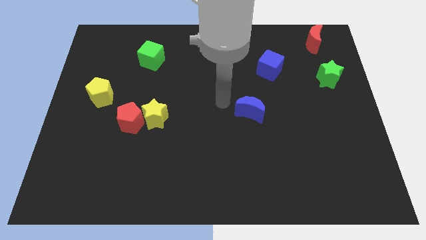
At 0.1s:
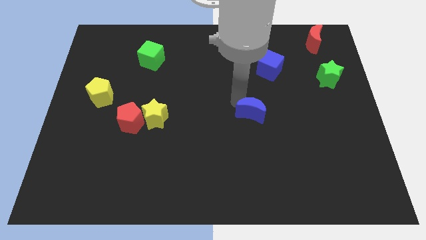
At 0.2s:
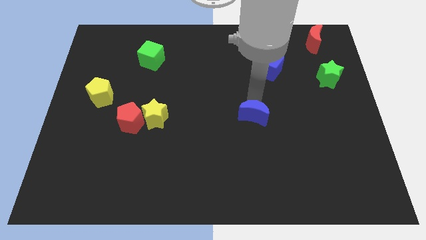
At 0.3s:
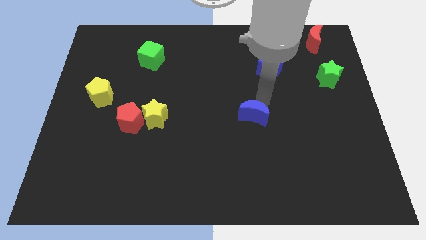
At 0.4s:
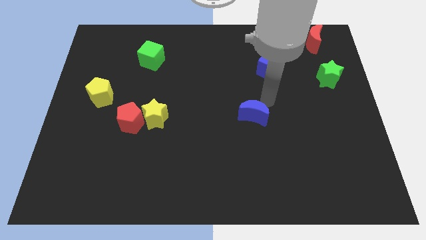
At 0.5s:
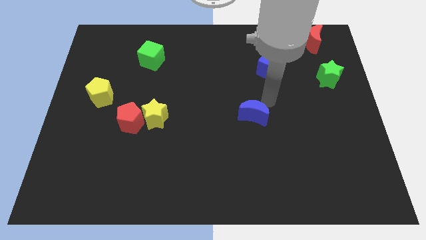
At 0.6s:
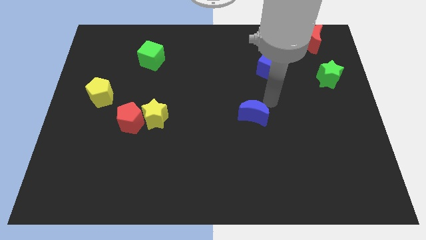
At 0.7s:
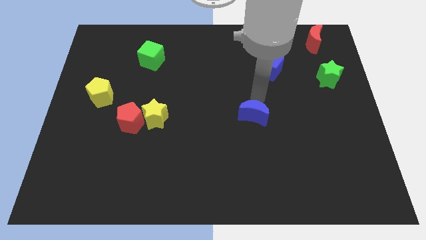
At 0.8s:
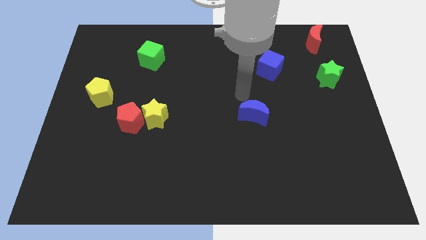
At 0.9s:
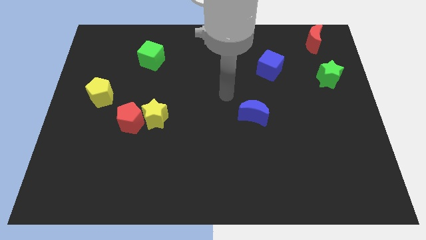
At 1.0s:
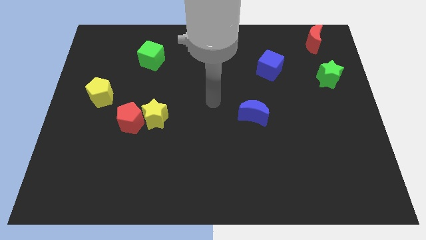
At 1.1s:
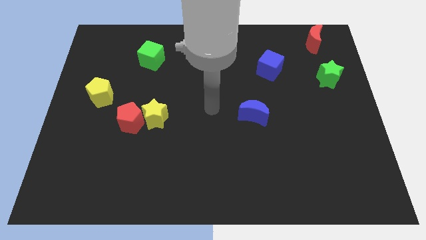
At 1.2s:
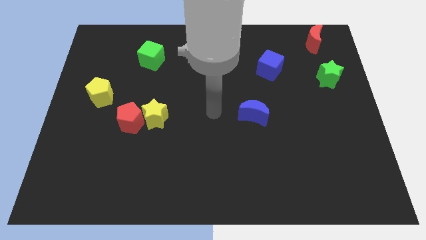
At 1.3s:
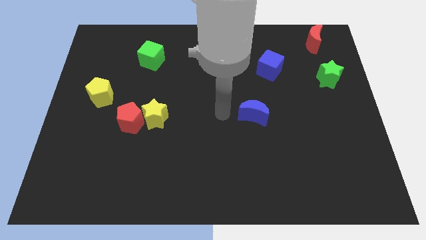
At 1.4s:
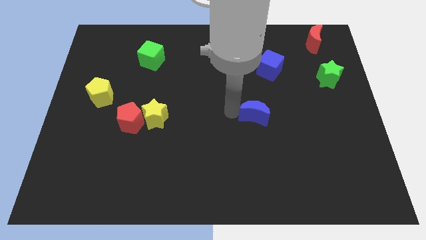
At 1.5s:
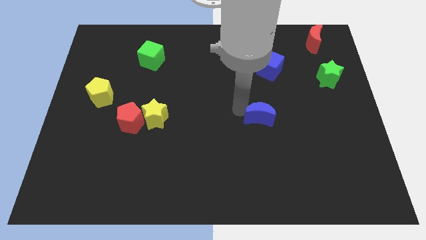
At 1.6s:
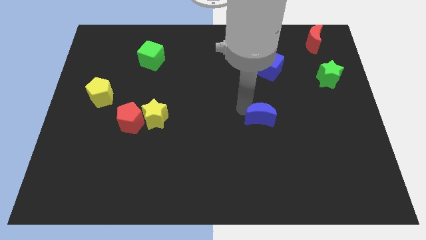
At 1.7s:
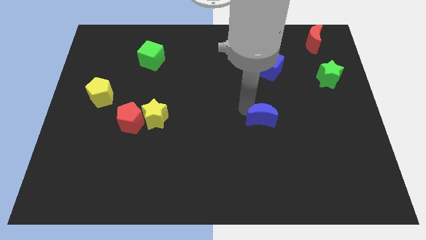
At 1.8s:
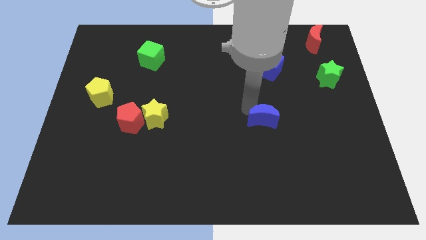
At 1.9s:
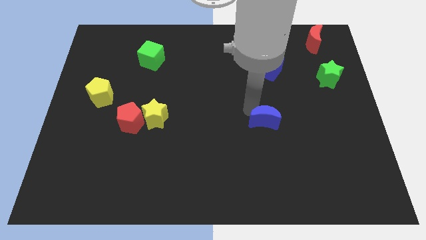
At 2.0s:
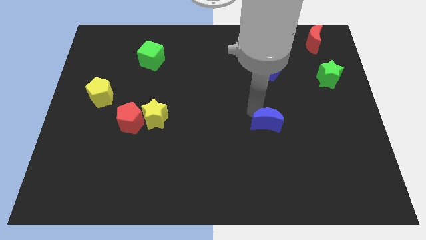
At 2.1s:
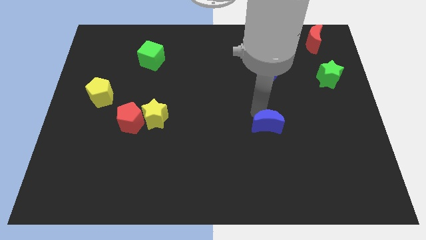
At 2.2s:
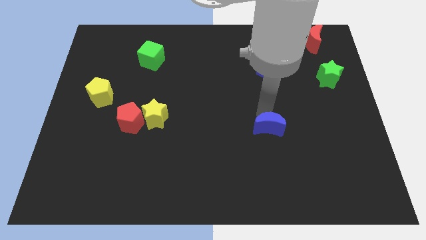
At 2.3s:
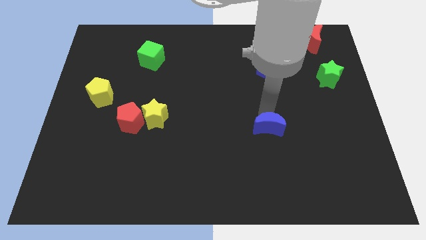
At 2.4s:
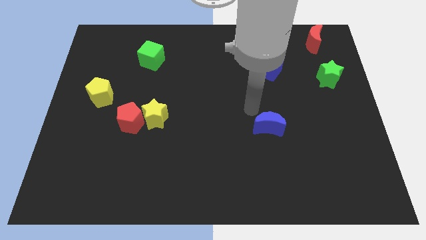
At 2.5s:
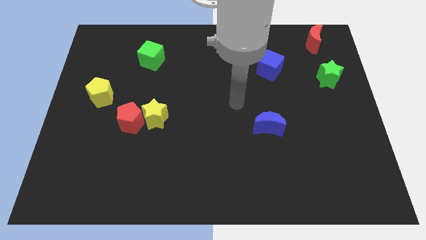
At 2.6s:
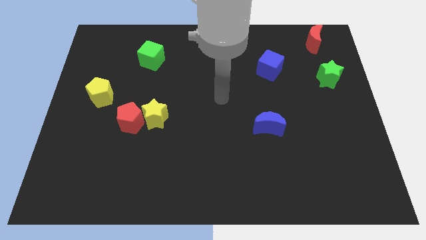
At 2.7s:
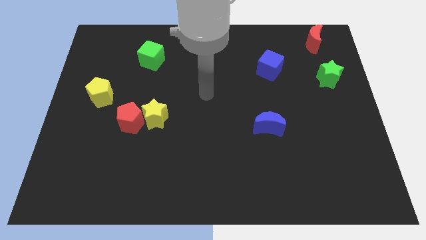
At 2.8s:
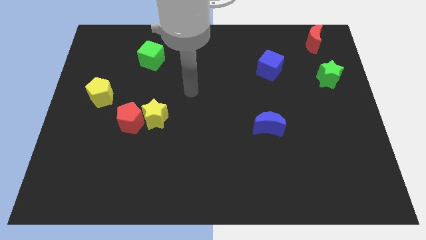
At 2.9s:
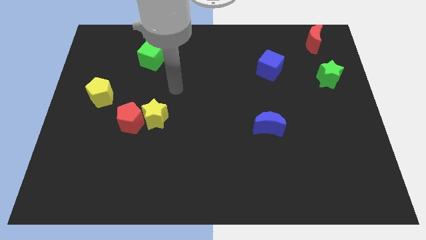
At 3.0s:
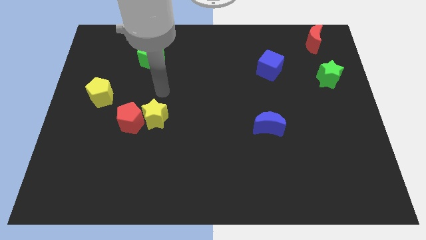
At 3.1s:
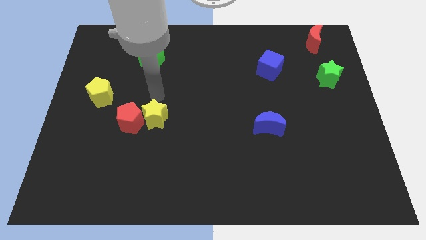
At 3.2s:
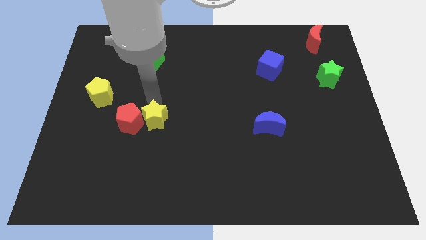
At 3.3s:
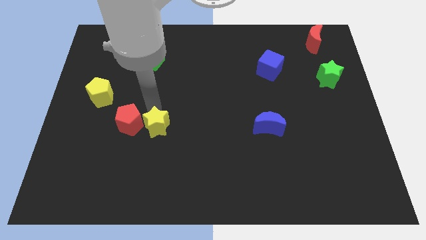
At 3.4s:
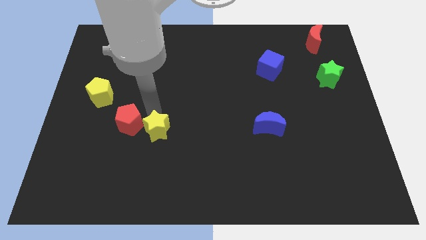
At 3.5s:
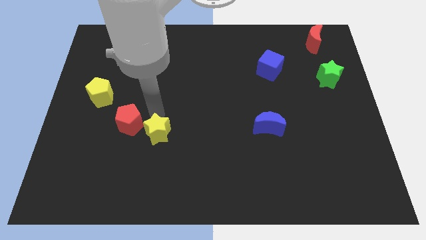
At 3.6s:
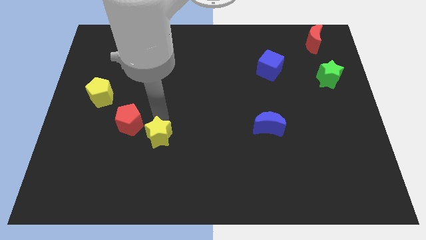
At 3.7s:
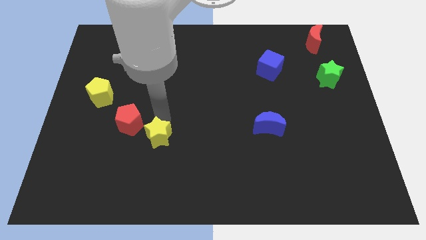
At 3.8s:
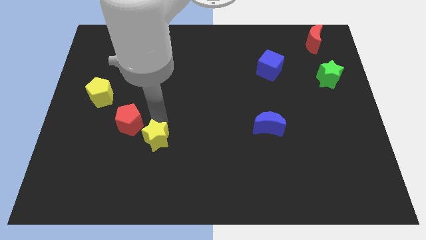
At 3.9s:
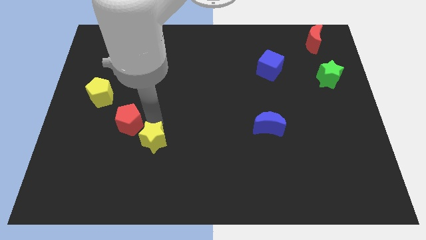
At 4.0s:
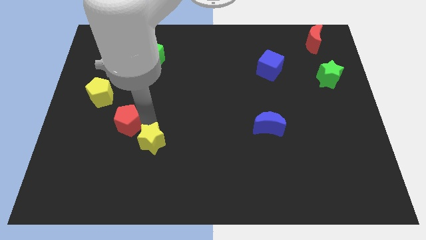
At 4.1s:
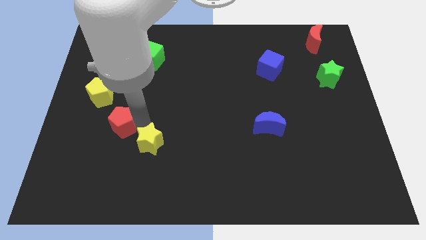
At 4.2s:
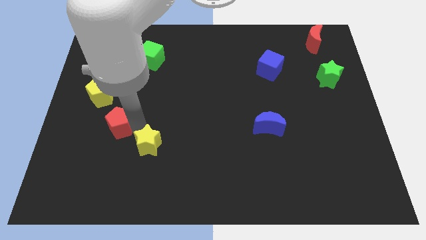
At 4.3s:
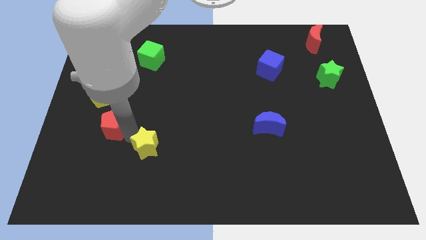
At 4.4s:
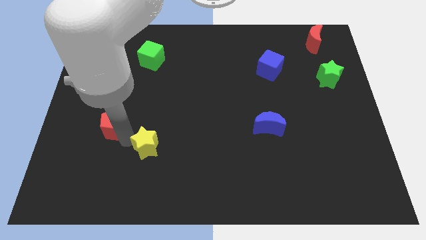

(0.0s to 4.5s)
move the yellow star to the center bottom

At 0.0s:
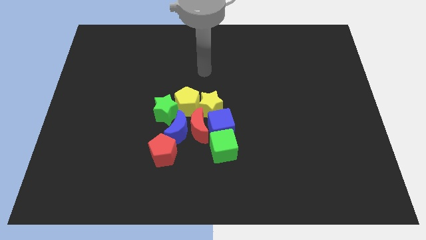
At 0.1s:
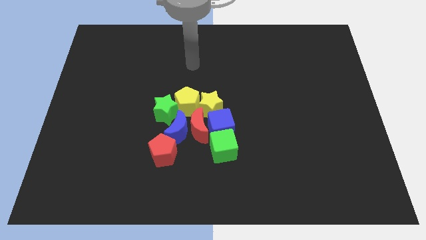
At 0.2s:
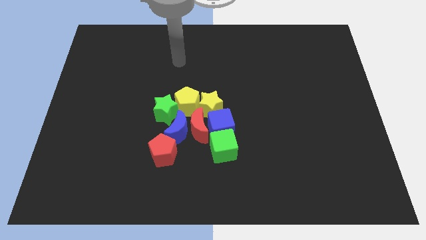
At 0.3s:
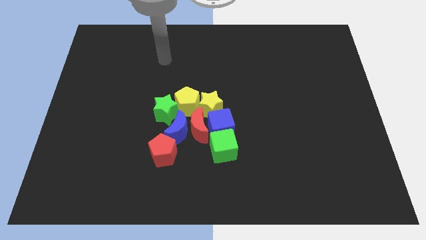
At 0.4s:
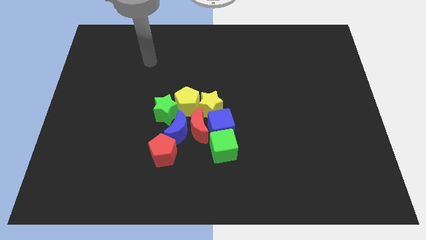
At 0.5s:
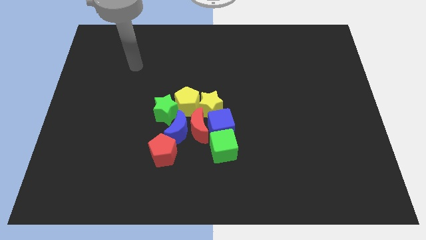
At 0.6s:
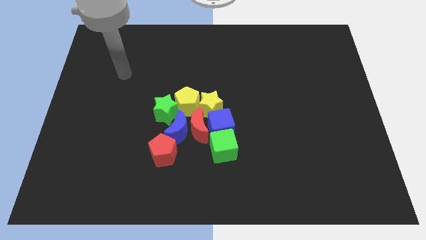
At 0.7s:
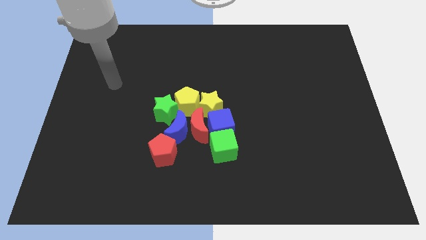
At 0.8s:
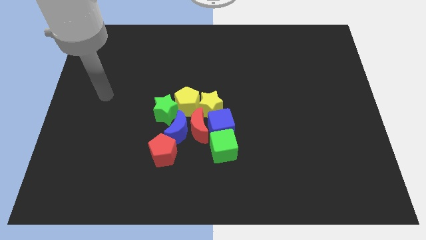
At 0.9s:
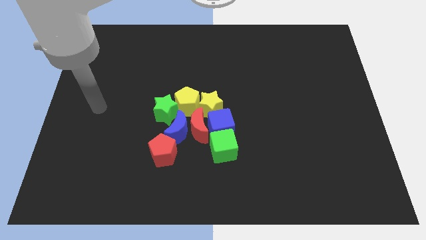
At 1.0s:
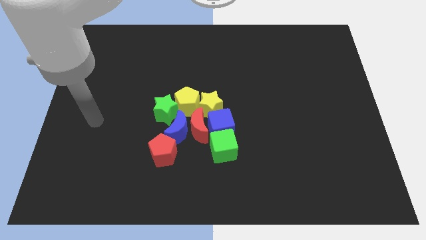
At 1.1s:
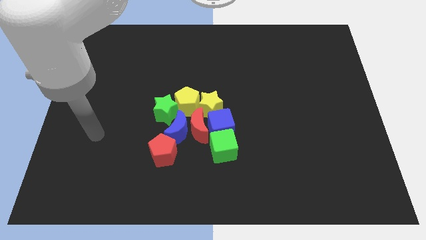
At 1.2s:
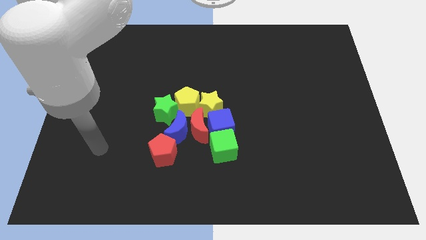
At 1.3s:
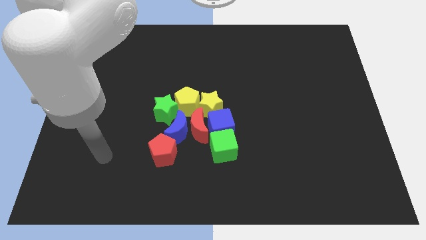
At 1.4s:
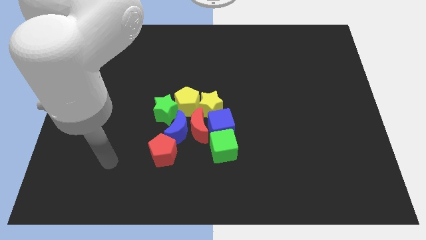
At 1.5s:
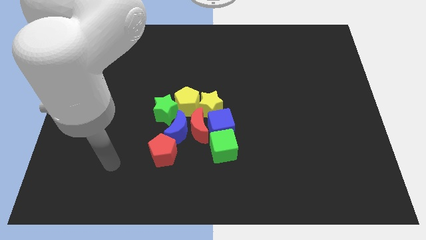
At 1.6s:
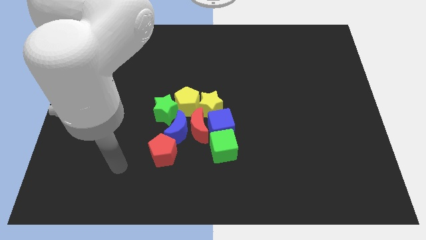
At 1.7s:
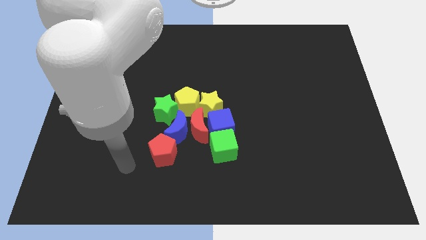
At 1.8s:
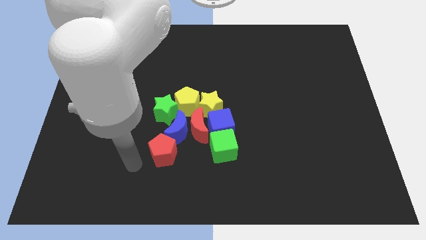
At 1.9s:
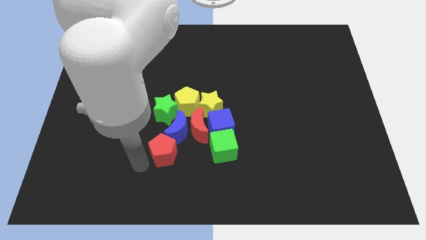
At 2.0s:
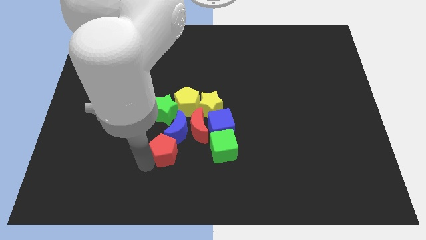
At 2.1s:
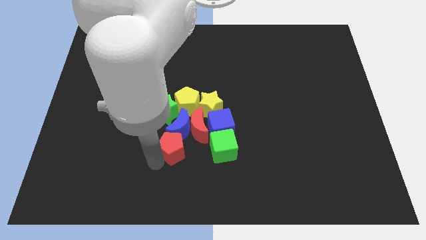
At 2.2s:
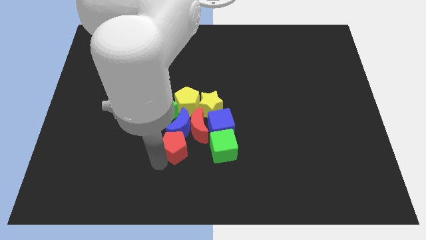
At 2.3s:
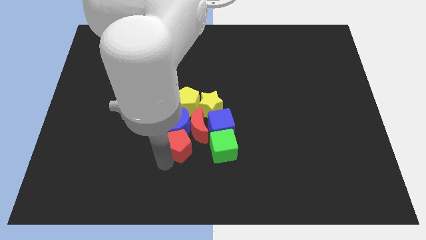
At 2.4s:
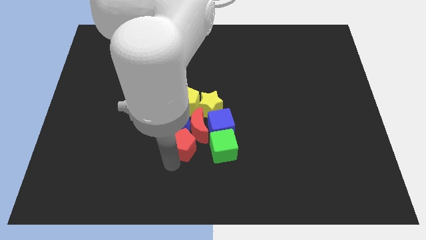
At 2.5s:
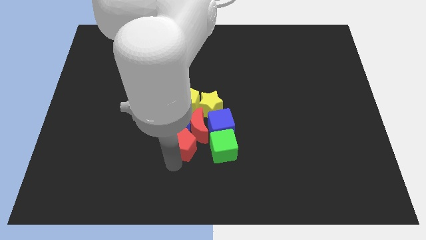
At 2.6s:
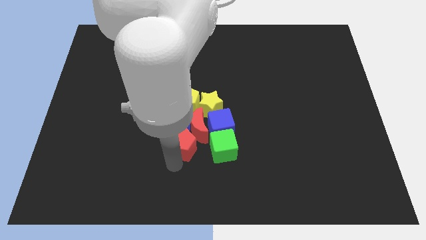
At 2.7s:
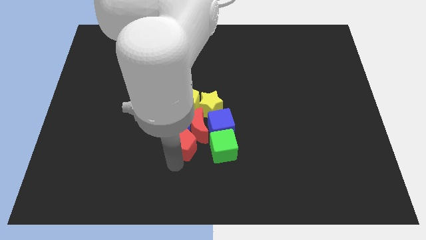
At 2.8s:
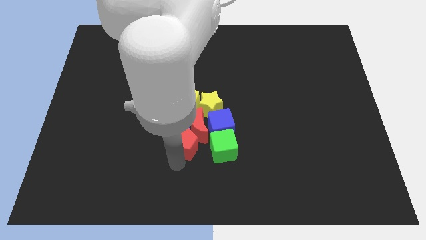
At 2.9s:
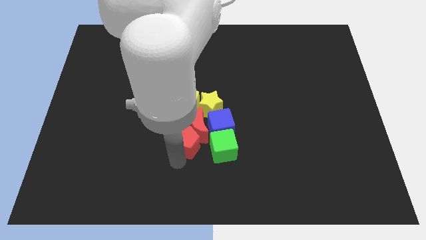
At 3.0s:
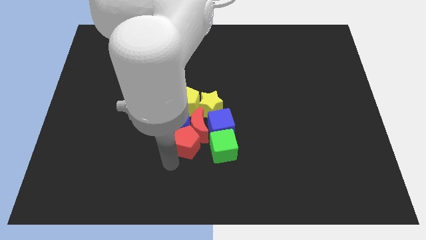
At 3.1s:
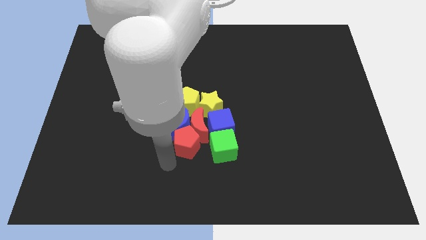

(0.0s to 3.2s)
add the red pentagon to the group of blocks

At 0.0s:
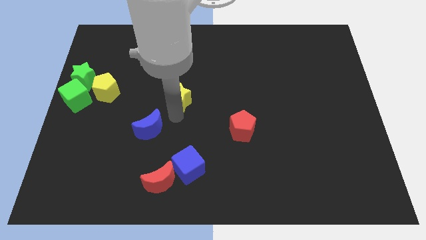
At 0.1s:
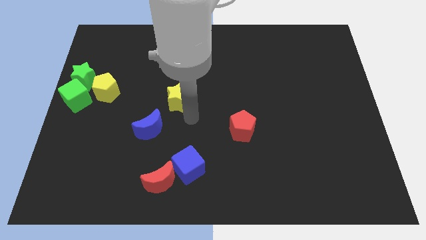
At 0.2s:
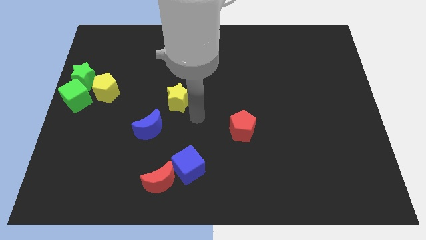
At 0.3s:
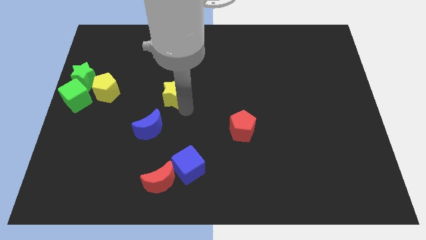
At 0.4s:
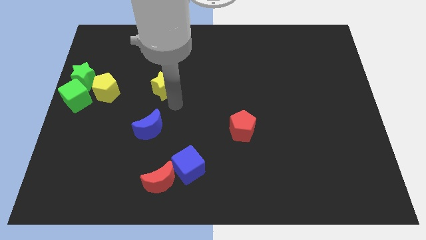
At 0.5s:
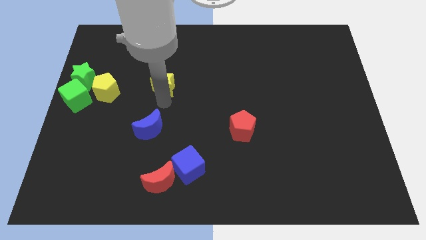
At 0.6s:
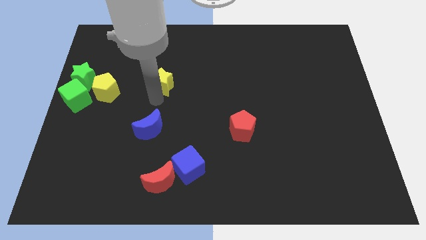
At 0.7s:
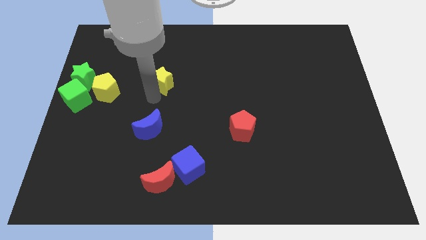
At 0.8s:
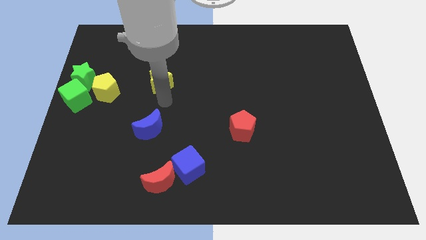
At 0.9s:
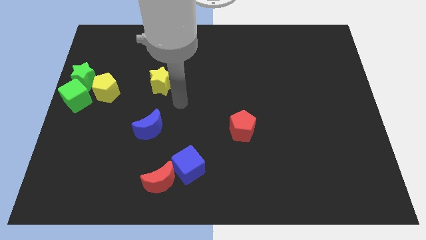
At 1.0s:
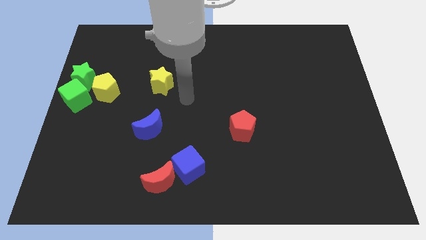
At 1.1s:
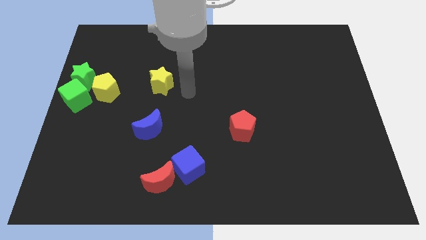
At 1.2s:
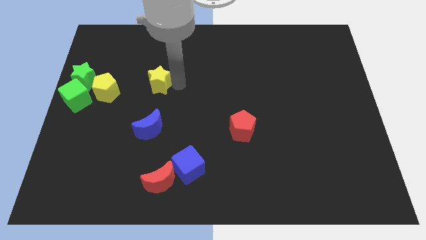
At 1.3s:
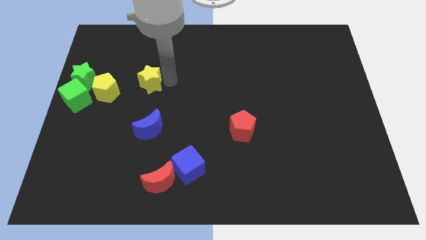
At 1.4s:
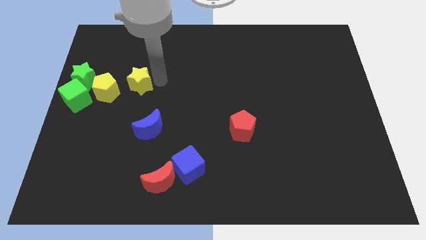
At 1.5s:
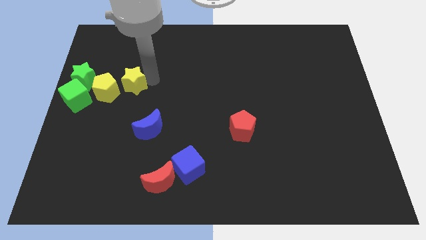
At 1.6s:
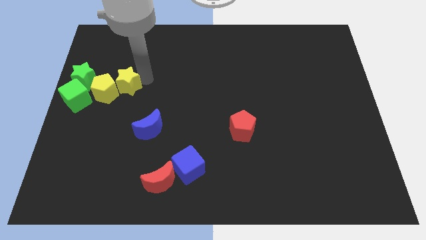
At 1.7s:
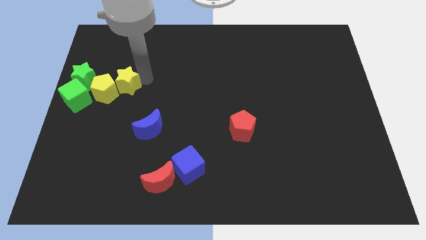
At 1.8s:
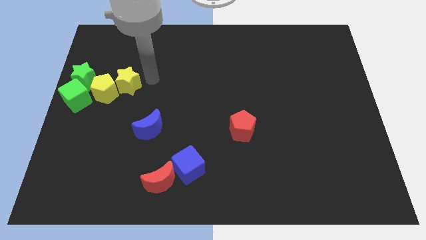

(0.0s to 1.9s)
move the yellow star diagonally top left to the blue moon
